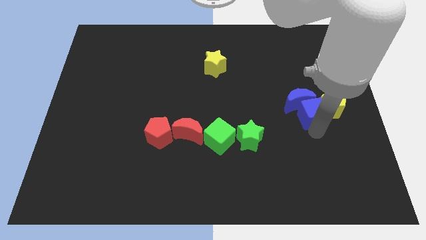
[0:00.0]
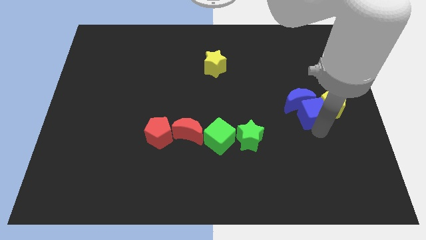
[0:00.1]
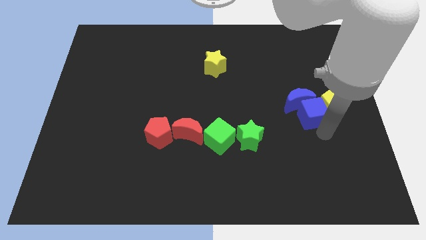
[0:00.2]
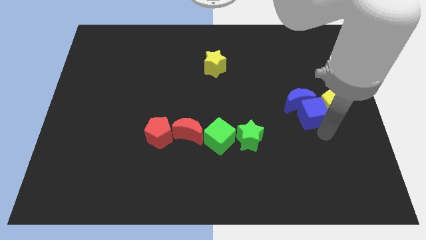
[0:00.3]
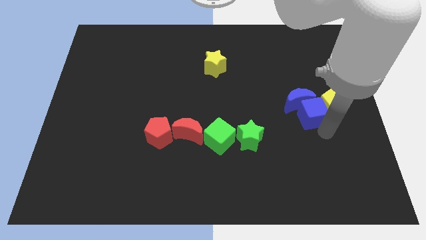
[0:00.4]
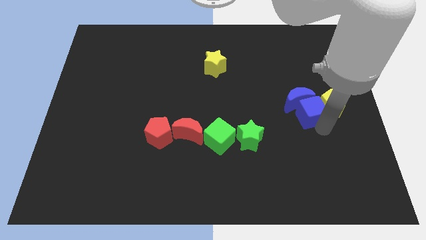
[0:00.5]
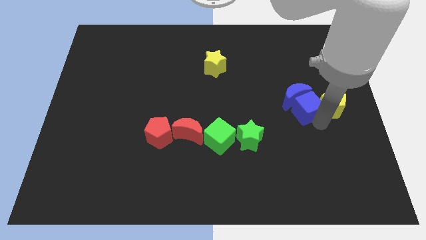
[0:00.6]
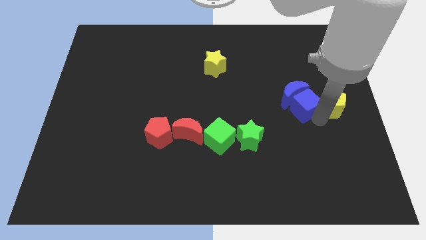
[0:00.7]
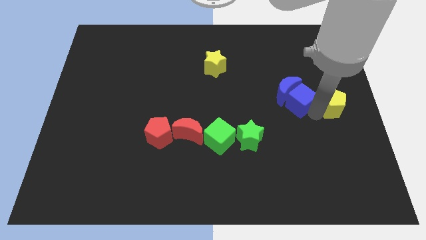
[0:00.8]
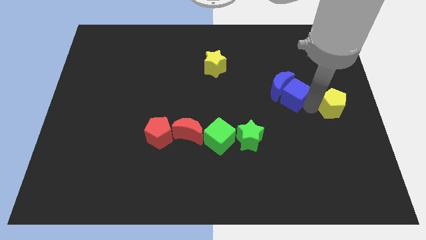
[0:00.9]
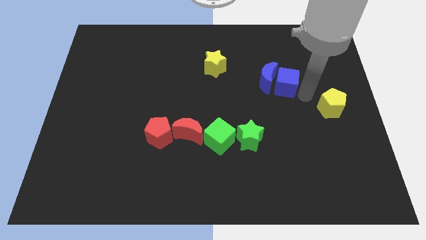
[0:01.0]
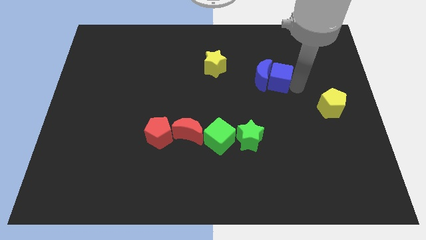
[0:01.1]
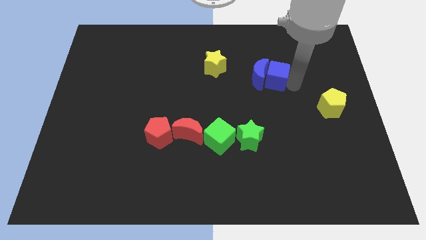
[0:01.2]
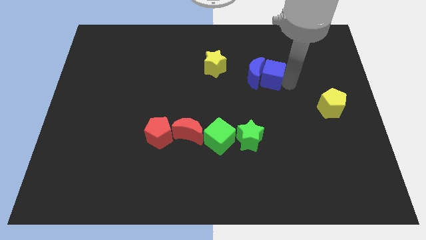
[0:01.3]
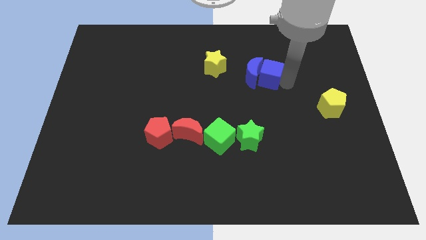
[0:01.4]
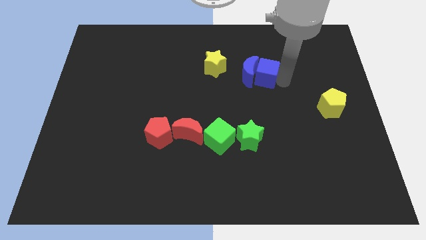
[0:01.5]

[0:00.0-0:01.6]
push the blue moon with a blue cube towards the top center

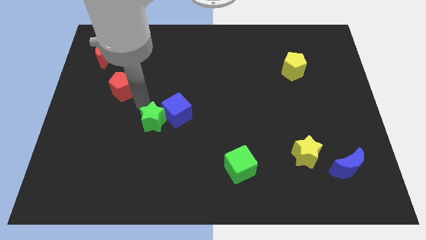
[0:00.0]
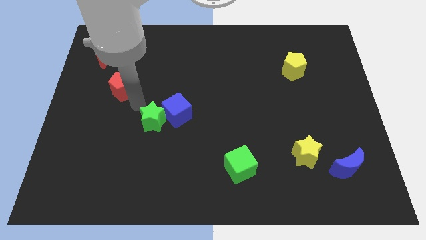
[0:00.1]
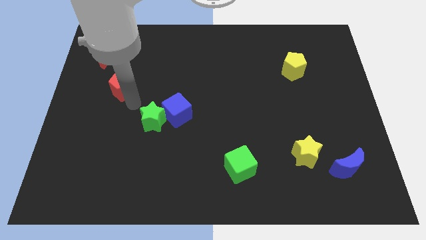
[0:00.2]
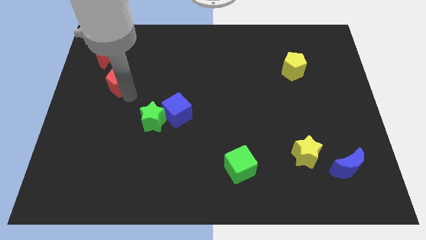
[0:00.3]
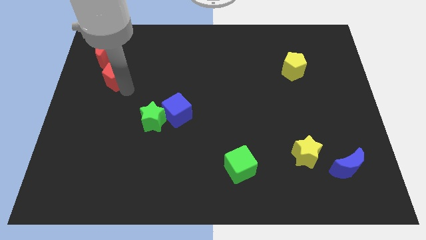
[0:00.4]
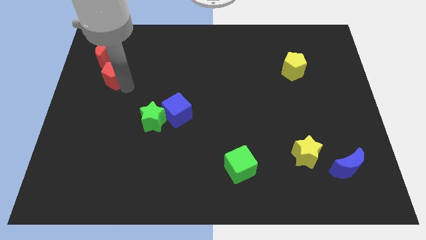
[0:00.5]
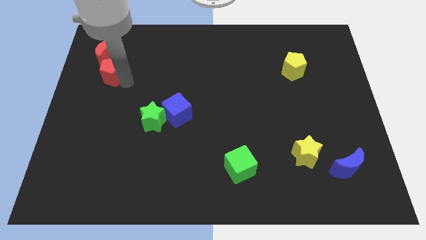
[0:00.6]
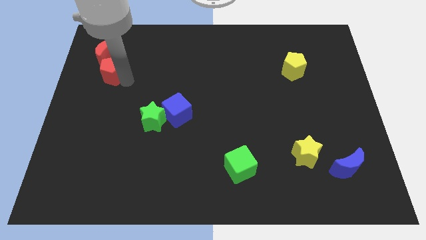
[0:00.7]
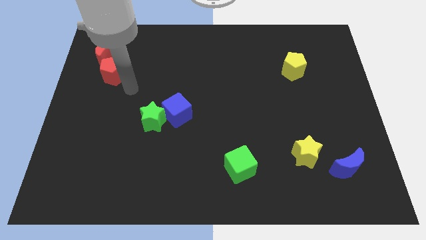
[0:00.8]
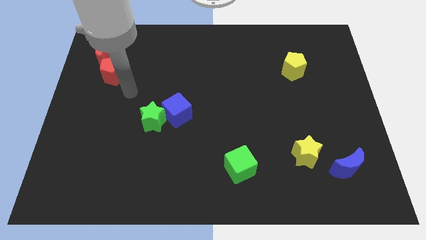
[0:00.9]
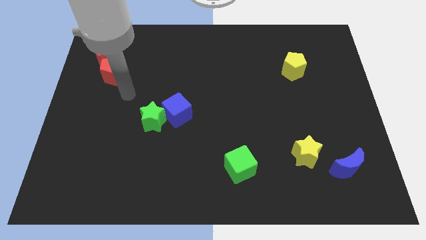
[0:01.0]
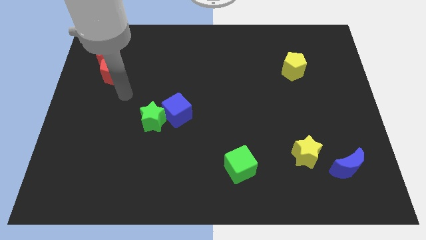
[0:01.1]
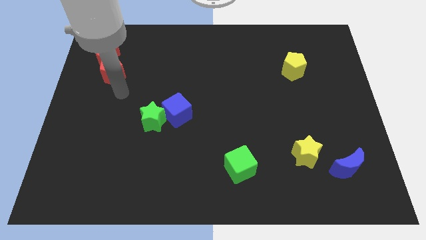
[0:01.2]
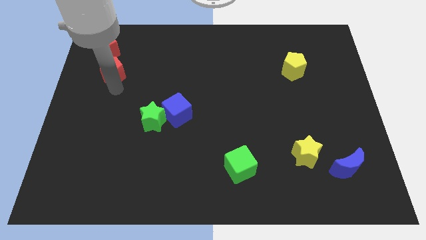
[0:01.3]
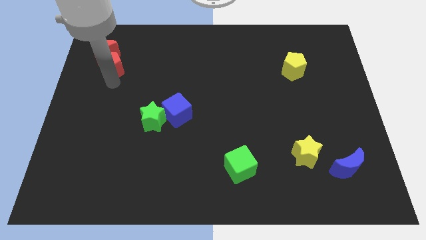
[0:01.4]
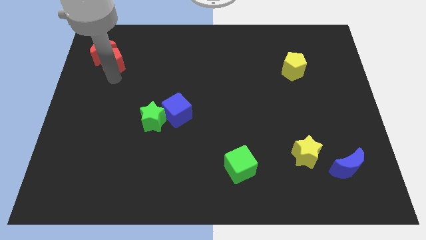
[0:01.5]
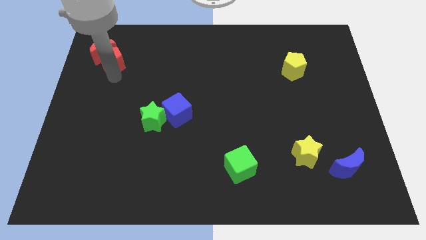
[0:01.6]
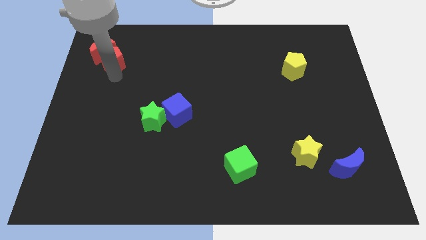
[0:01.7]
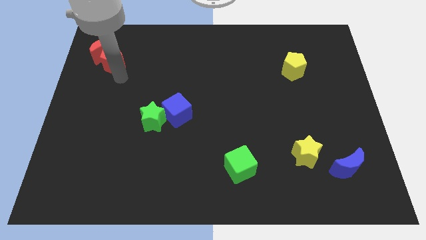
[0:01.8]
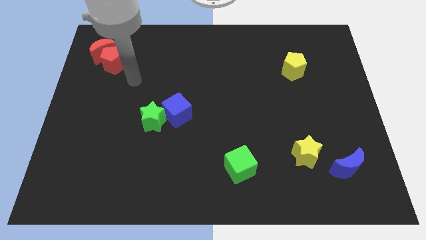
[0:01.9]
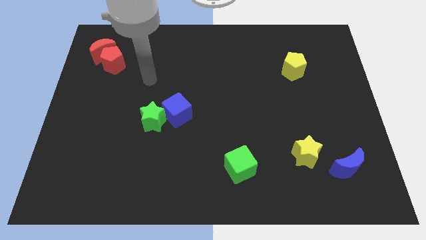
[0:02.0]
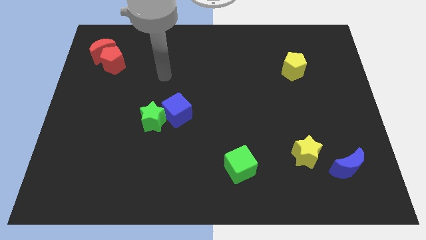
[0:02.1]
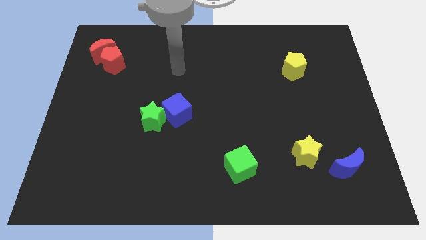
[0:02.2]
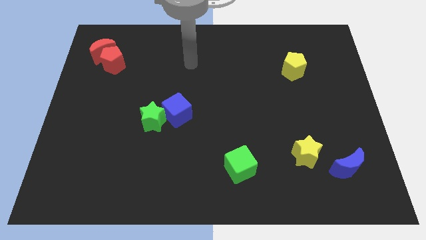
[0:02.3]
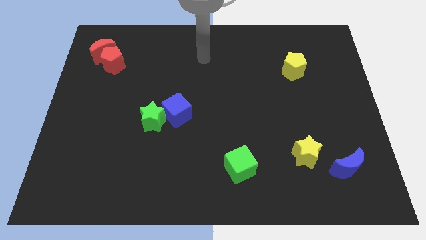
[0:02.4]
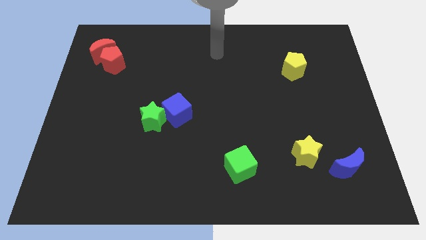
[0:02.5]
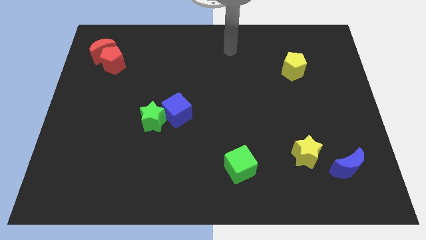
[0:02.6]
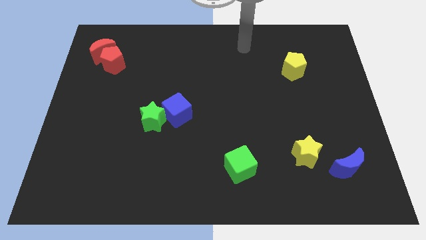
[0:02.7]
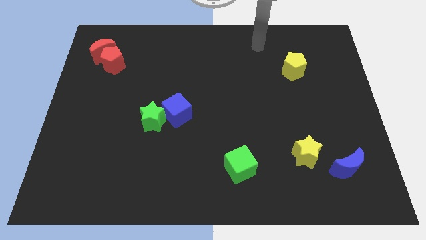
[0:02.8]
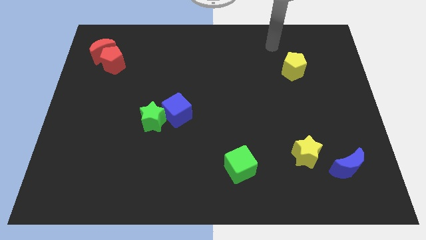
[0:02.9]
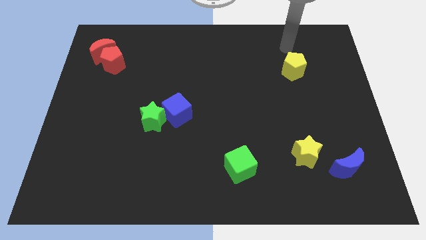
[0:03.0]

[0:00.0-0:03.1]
push red blocks slightly to the top left of the board

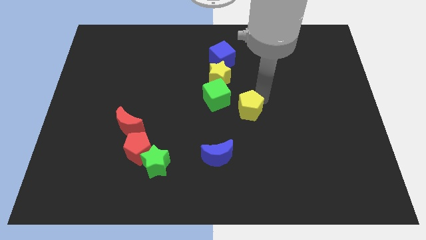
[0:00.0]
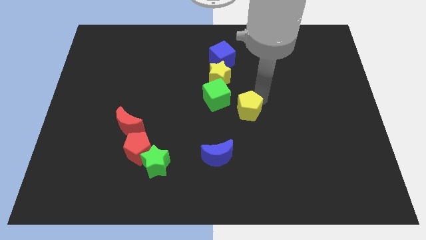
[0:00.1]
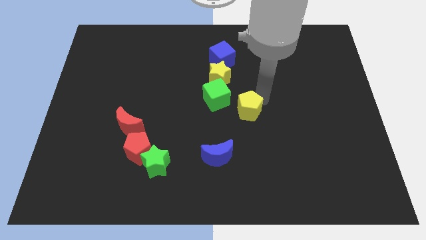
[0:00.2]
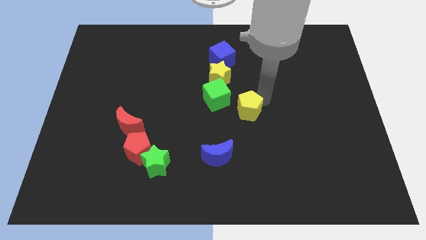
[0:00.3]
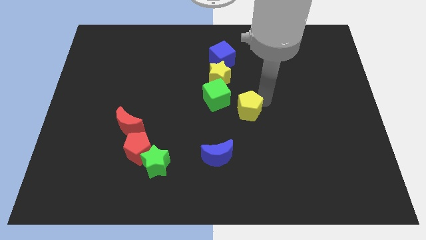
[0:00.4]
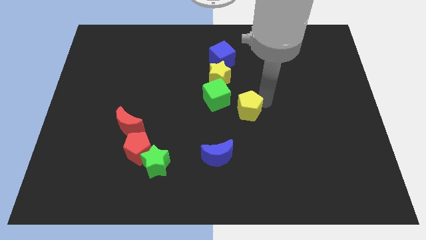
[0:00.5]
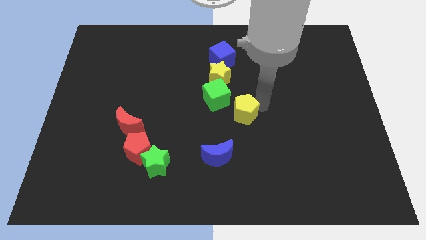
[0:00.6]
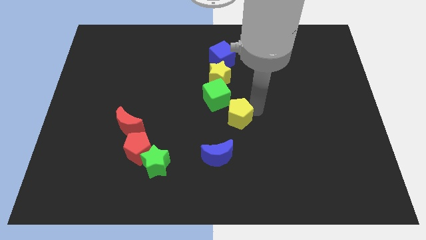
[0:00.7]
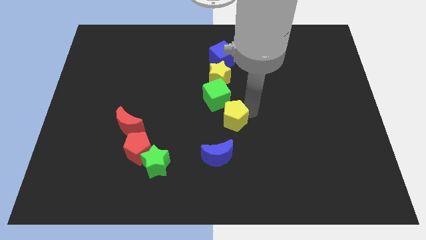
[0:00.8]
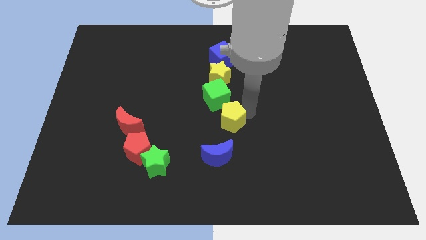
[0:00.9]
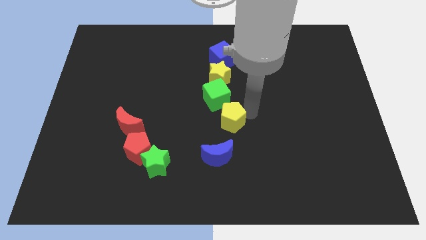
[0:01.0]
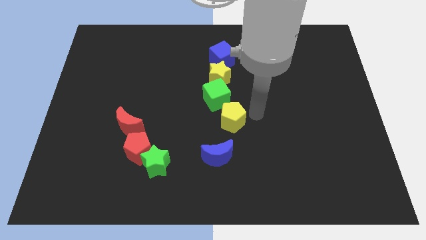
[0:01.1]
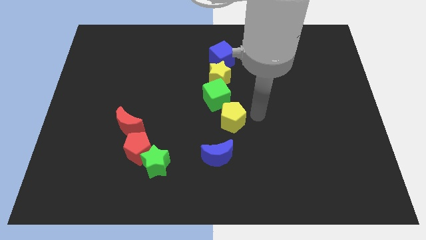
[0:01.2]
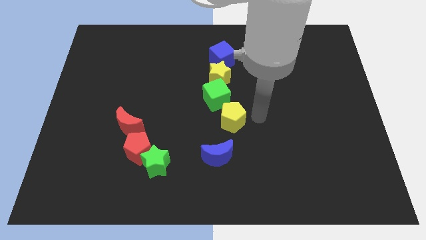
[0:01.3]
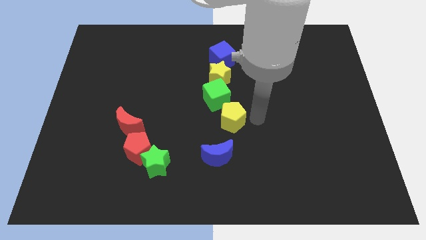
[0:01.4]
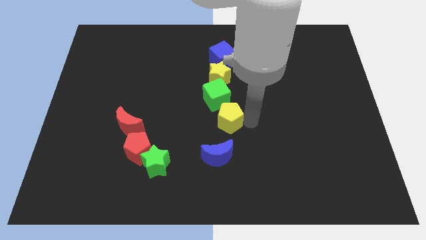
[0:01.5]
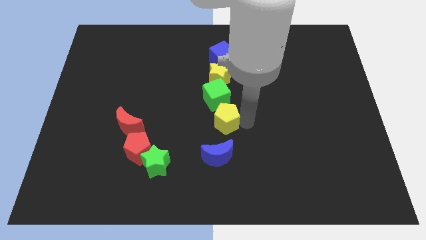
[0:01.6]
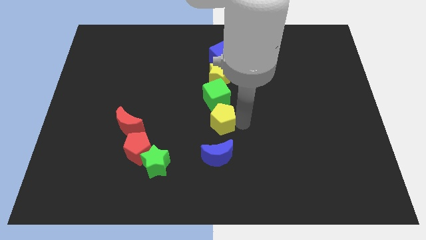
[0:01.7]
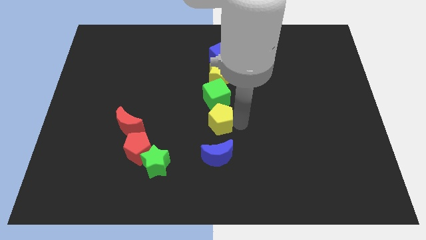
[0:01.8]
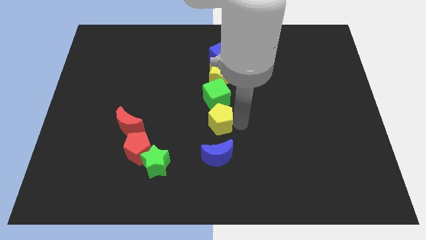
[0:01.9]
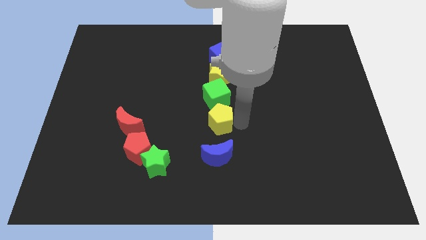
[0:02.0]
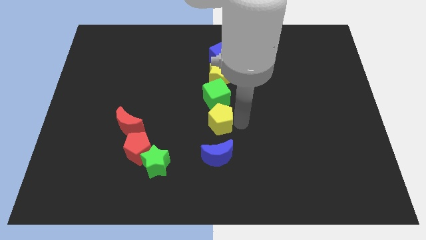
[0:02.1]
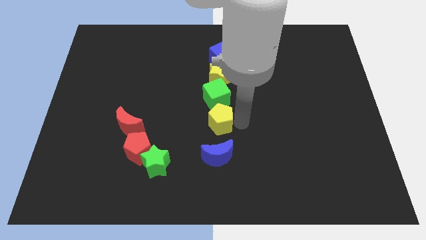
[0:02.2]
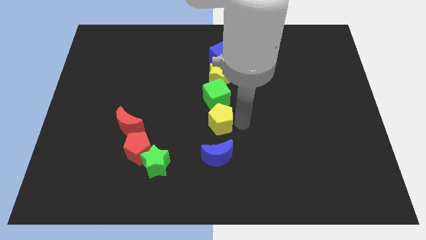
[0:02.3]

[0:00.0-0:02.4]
place the yellow pentagon in between green cube and blue crescent

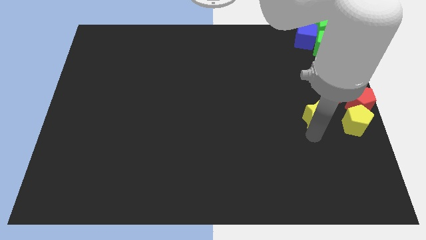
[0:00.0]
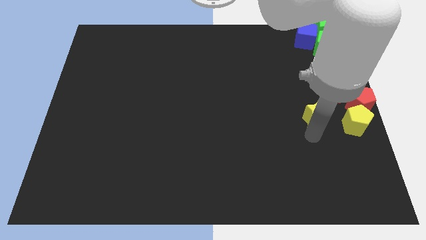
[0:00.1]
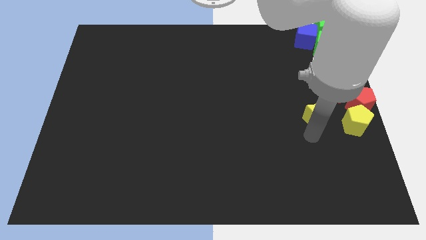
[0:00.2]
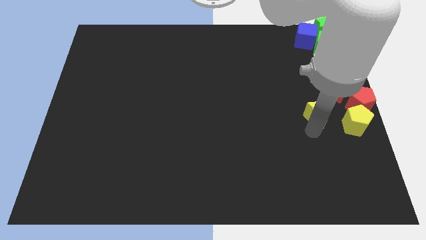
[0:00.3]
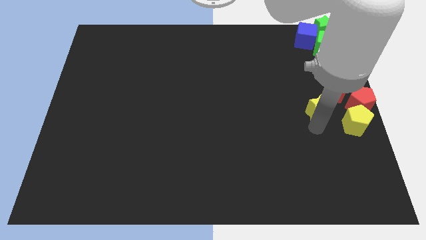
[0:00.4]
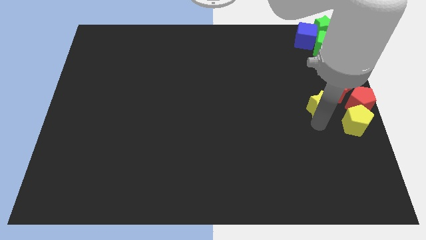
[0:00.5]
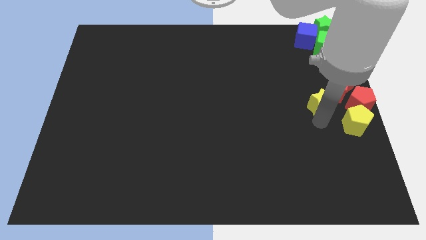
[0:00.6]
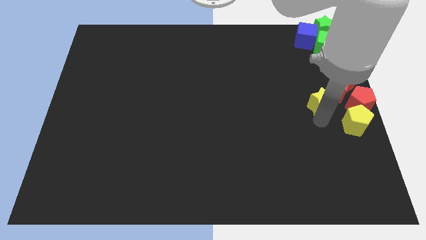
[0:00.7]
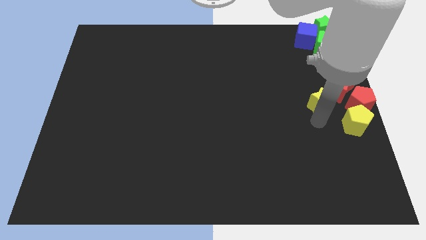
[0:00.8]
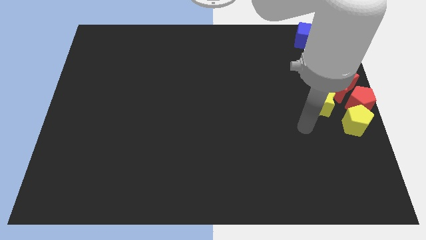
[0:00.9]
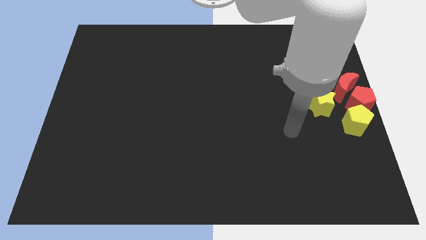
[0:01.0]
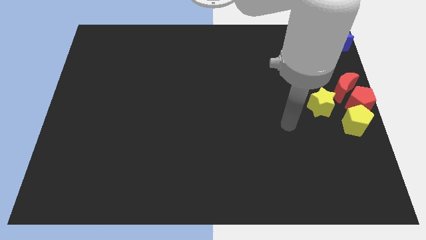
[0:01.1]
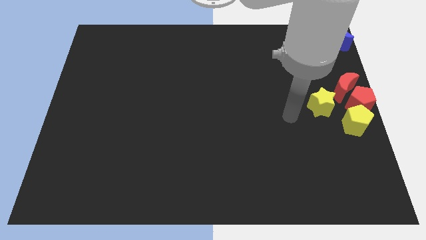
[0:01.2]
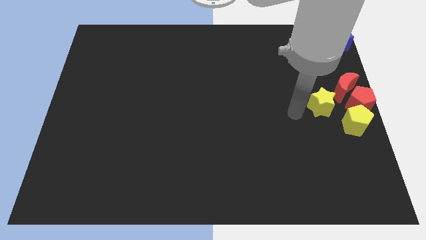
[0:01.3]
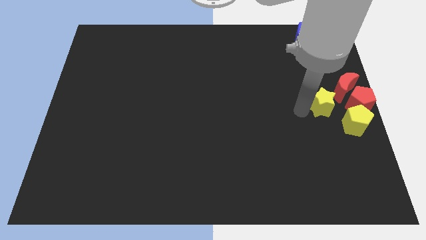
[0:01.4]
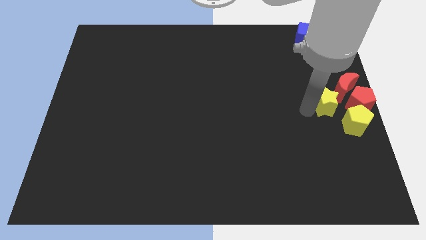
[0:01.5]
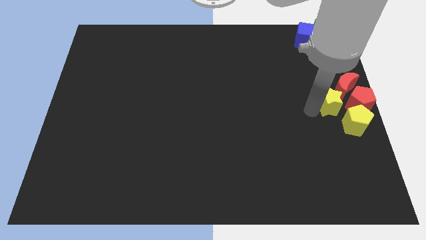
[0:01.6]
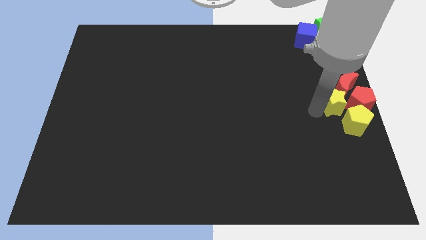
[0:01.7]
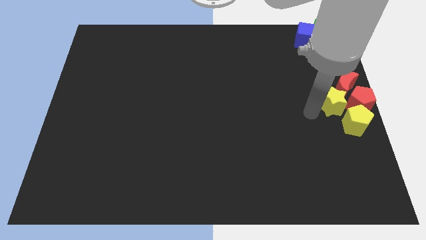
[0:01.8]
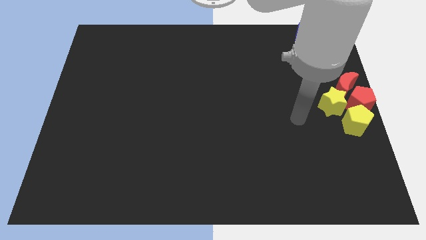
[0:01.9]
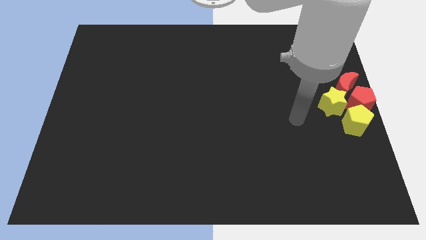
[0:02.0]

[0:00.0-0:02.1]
push the yellow star into the red moon
